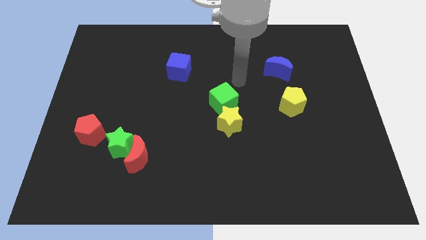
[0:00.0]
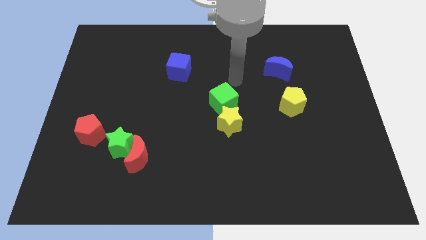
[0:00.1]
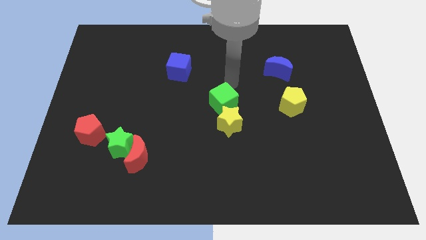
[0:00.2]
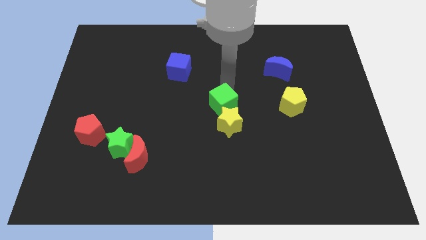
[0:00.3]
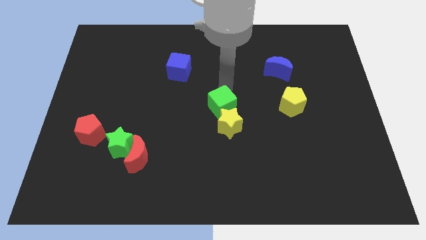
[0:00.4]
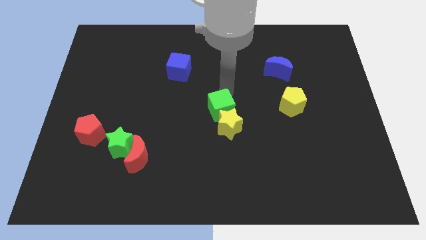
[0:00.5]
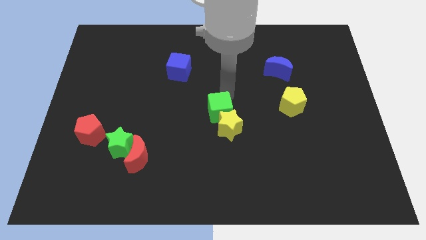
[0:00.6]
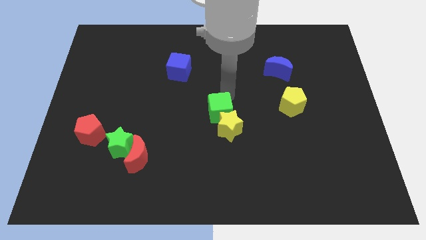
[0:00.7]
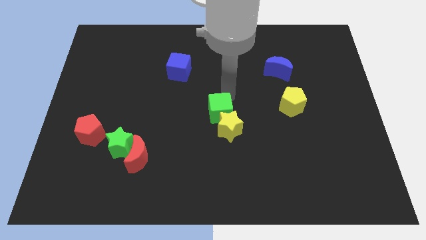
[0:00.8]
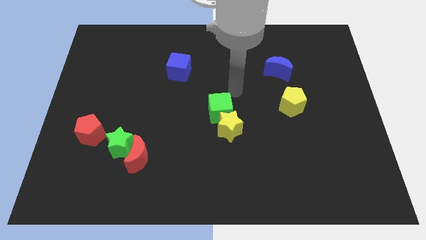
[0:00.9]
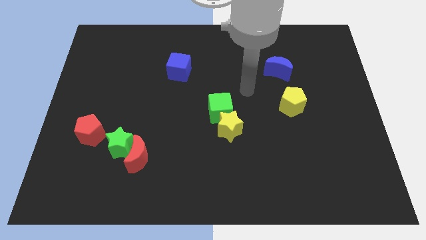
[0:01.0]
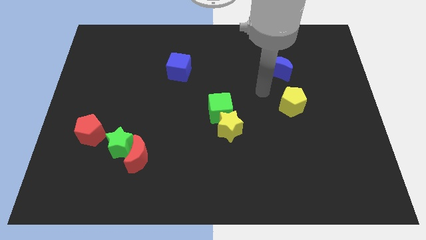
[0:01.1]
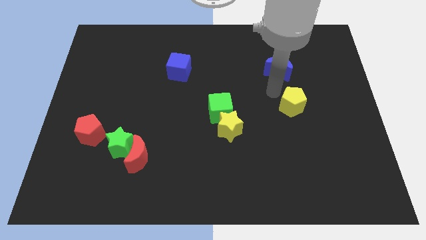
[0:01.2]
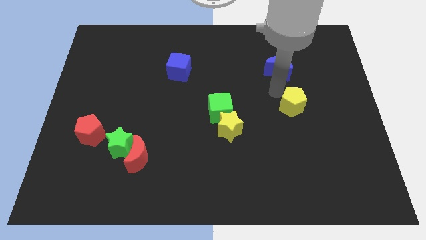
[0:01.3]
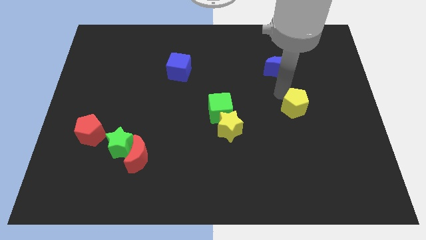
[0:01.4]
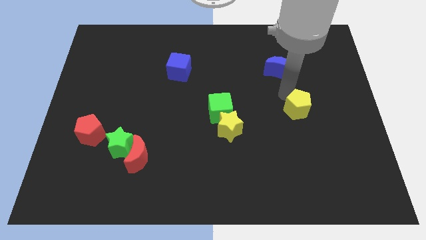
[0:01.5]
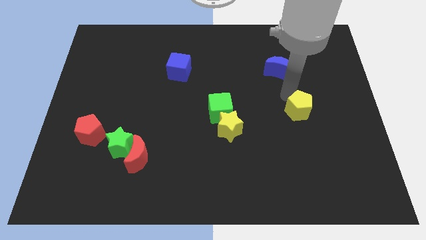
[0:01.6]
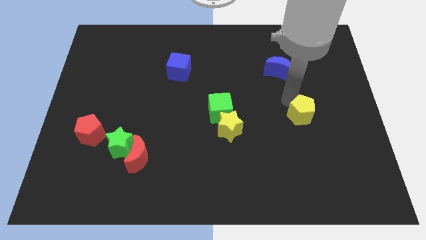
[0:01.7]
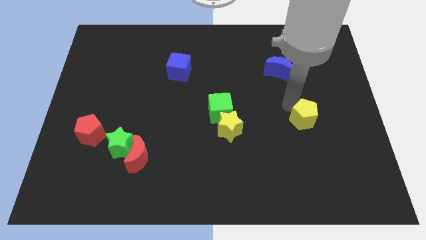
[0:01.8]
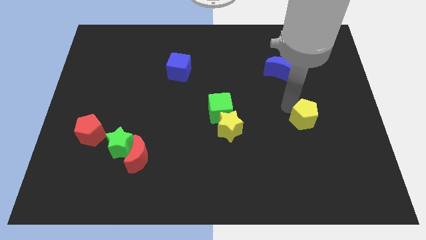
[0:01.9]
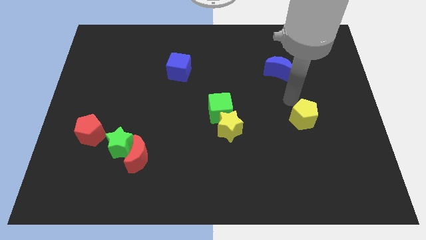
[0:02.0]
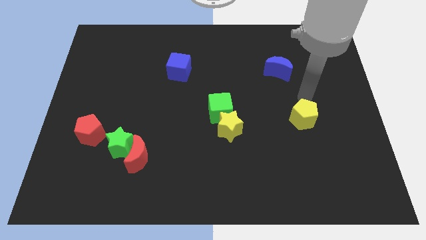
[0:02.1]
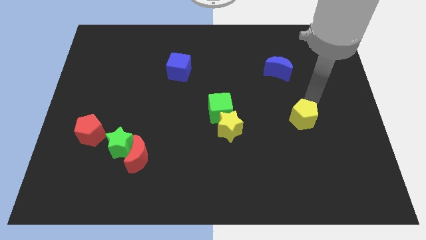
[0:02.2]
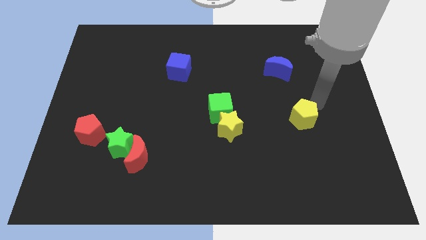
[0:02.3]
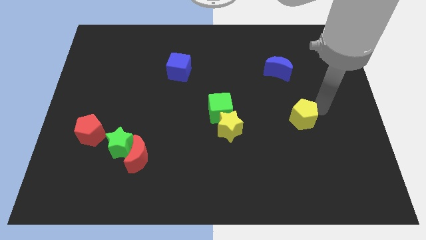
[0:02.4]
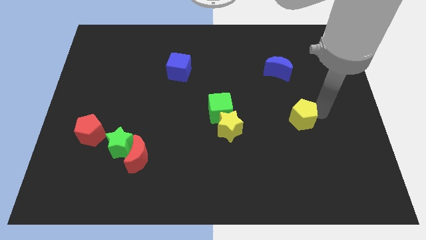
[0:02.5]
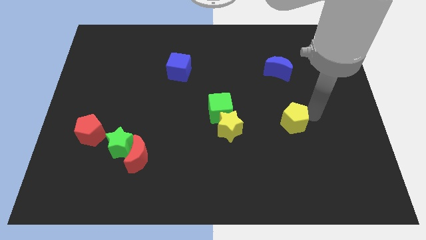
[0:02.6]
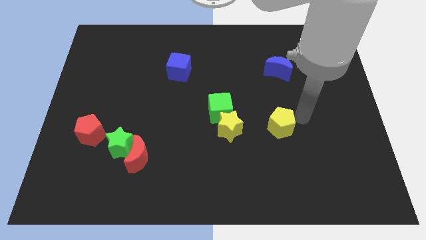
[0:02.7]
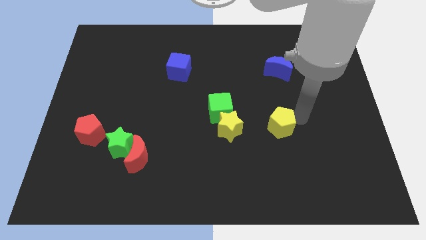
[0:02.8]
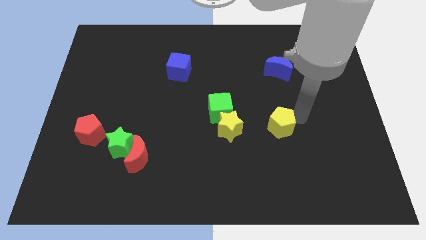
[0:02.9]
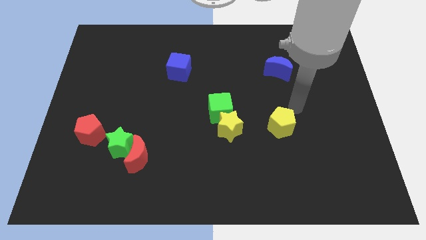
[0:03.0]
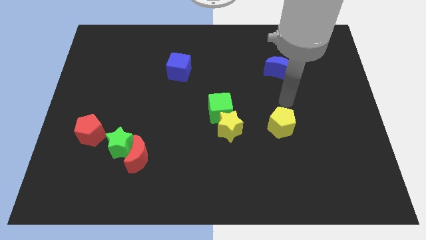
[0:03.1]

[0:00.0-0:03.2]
move the yellow pentagon horizontal to the yellow star on the right side

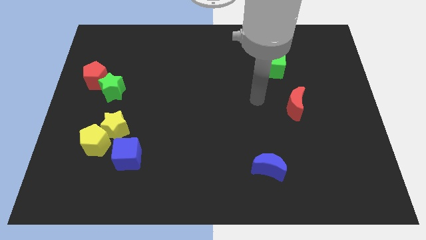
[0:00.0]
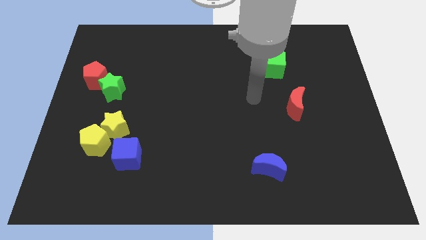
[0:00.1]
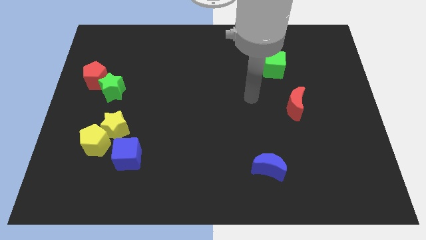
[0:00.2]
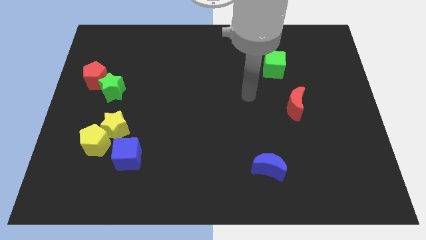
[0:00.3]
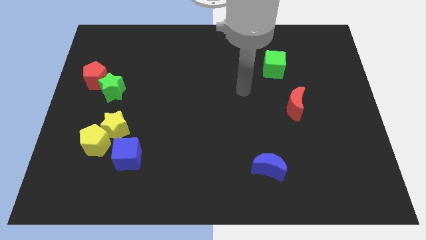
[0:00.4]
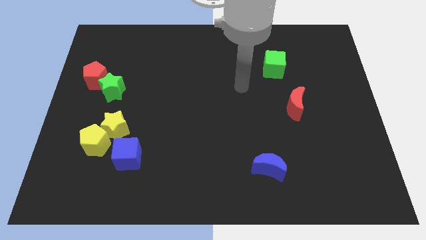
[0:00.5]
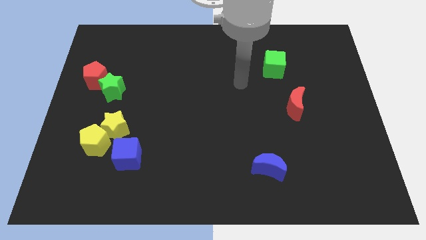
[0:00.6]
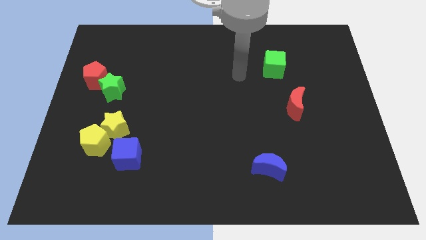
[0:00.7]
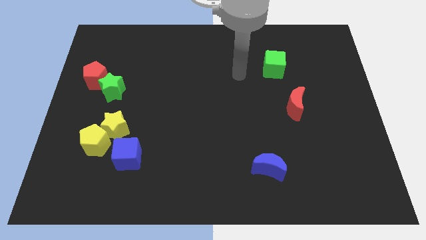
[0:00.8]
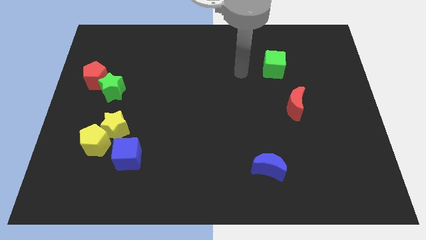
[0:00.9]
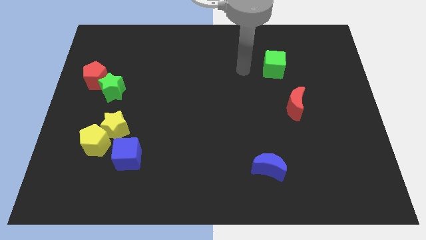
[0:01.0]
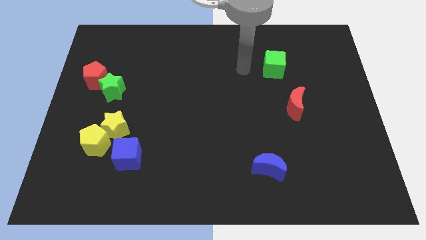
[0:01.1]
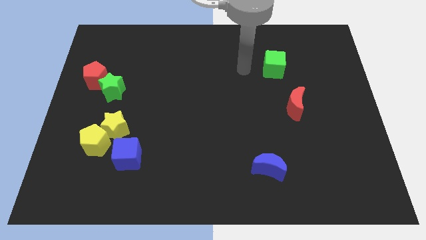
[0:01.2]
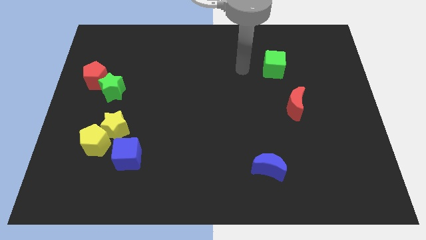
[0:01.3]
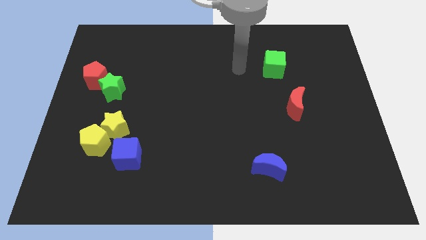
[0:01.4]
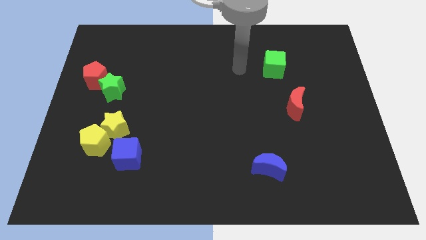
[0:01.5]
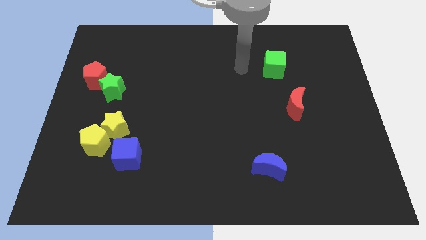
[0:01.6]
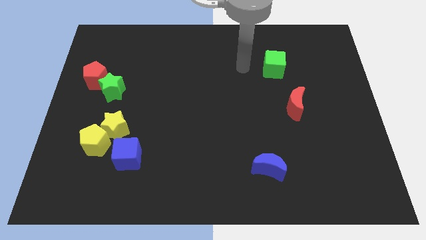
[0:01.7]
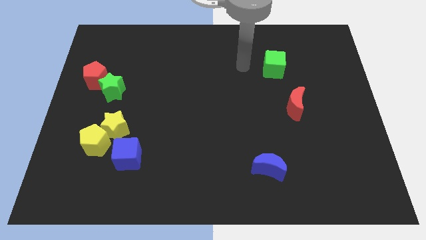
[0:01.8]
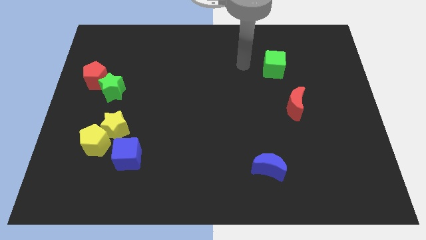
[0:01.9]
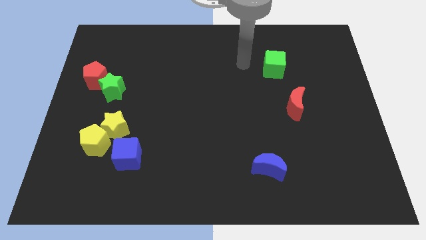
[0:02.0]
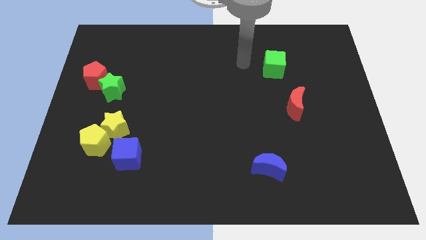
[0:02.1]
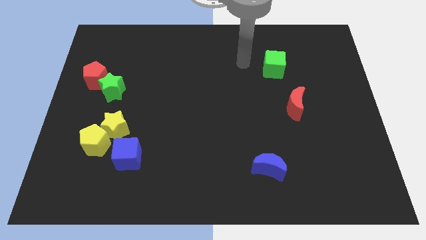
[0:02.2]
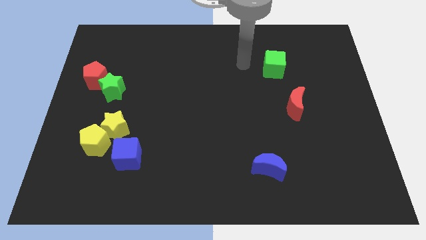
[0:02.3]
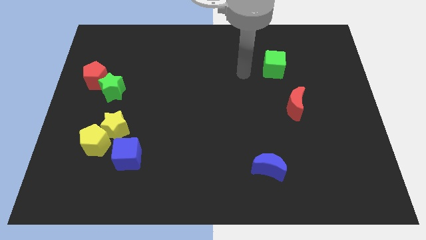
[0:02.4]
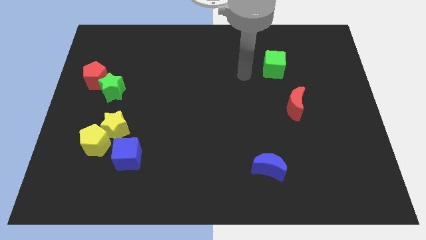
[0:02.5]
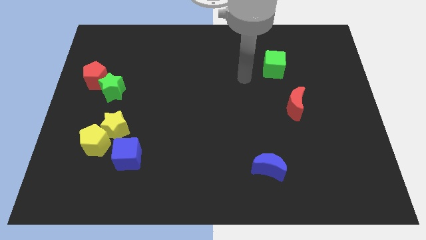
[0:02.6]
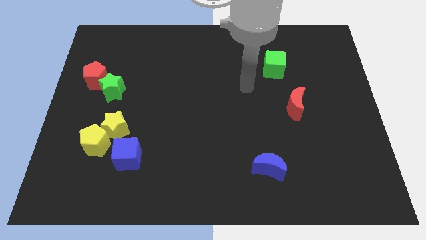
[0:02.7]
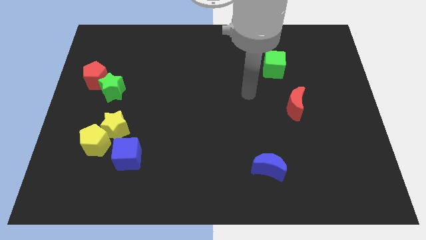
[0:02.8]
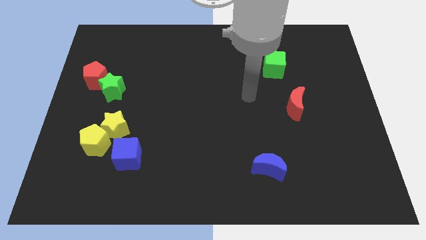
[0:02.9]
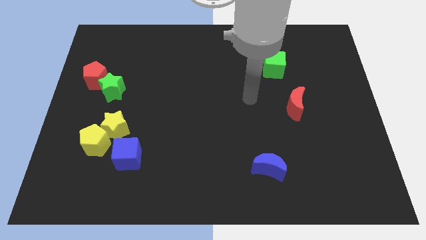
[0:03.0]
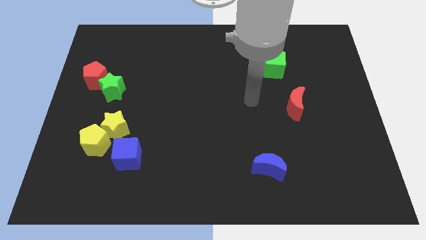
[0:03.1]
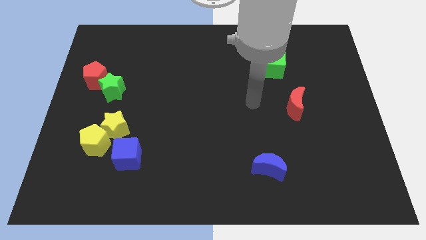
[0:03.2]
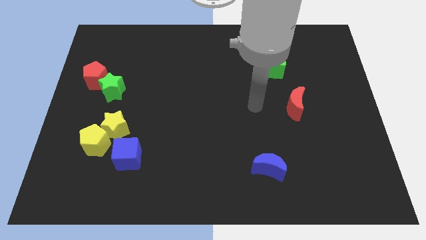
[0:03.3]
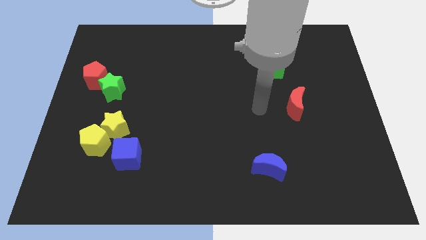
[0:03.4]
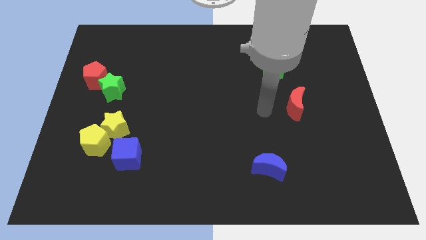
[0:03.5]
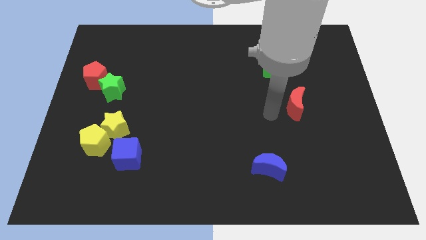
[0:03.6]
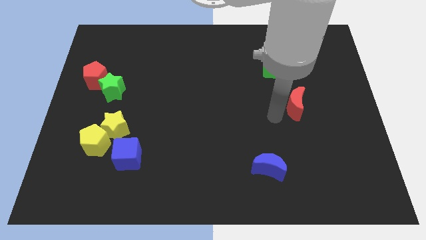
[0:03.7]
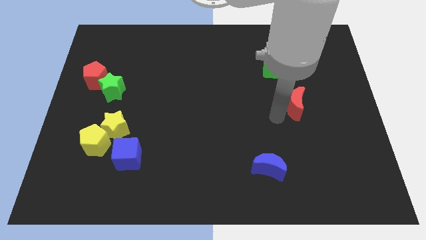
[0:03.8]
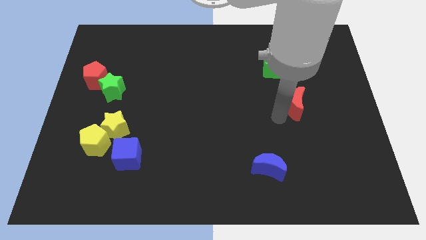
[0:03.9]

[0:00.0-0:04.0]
move the arm towards red crescent

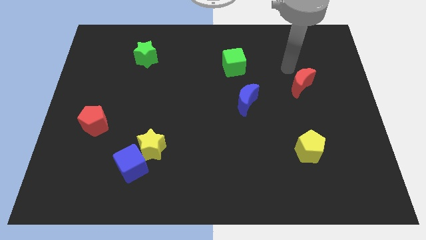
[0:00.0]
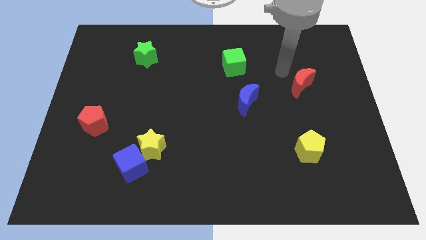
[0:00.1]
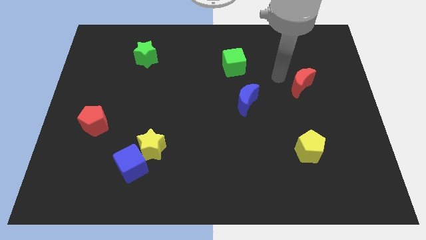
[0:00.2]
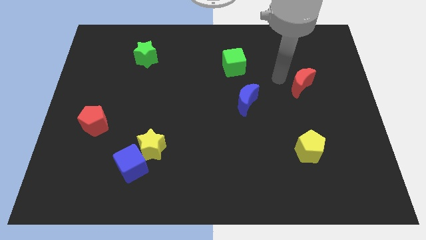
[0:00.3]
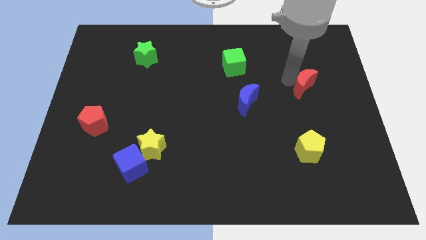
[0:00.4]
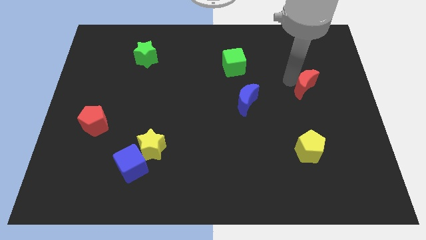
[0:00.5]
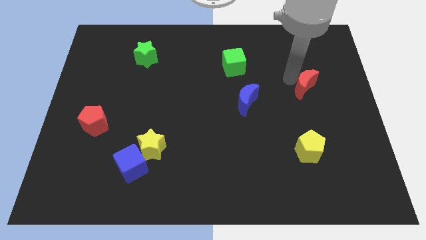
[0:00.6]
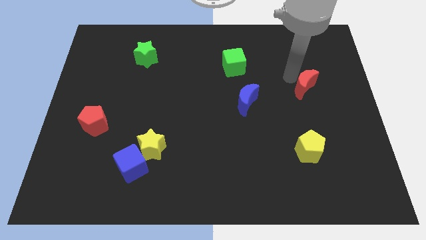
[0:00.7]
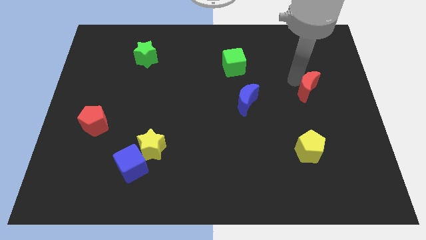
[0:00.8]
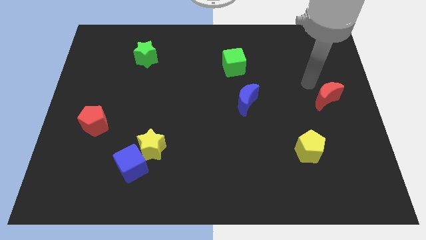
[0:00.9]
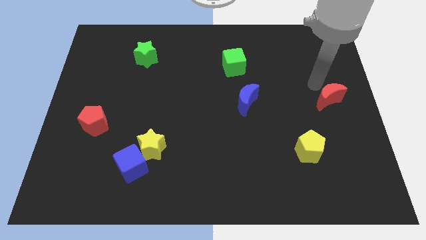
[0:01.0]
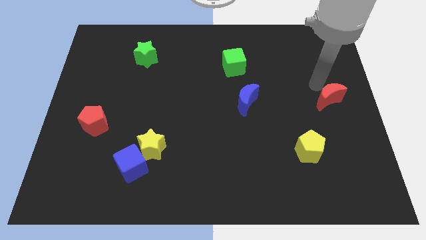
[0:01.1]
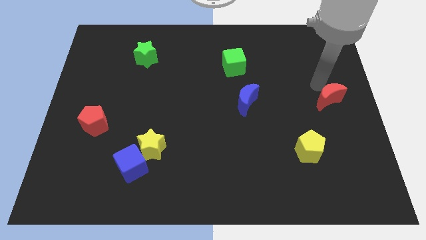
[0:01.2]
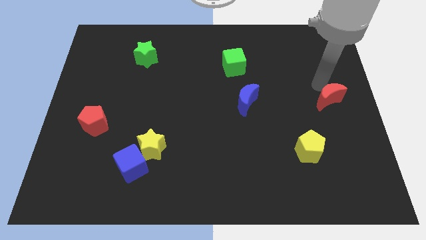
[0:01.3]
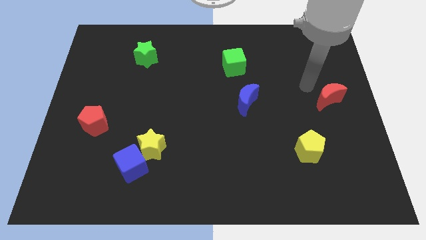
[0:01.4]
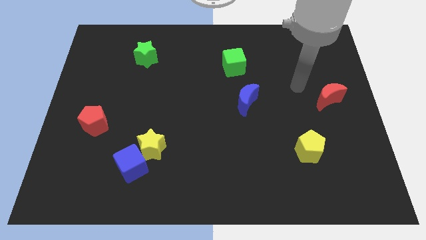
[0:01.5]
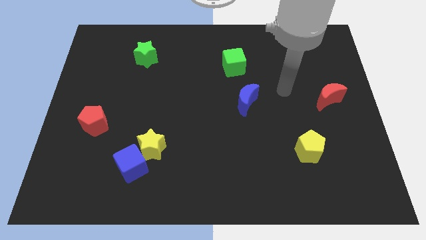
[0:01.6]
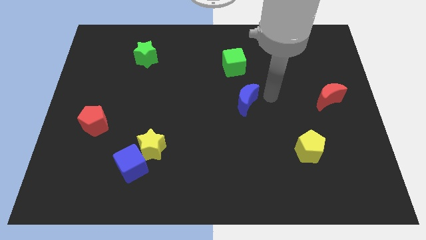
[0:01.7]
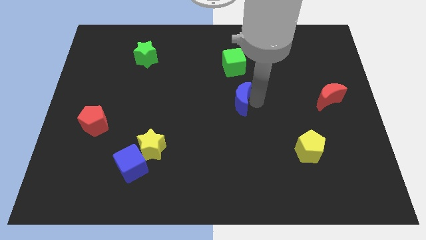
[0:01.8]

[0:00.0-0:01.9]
move the red crescent to the right center
